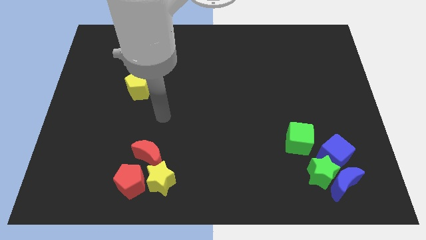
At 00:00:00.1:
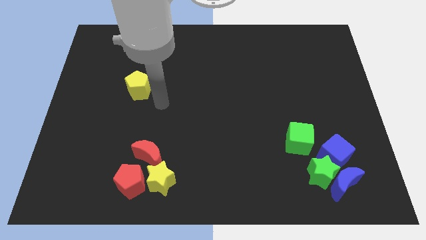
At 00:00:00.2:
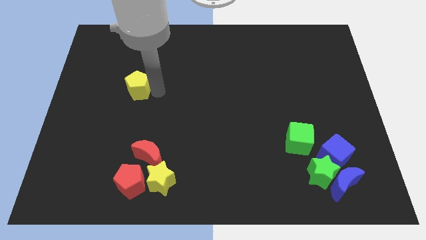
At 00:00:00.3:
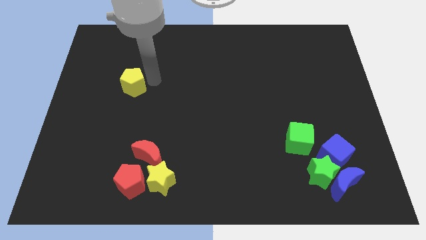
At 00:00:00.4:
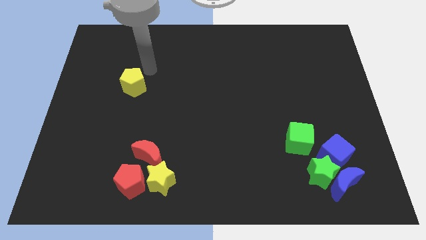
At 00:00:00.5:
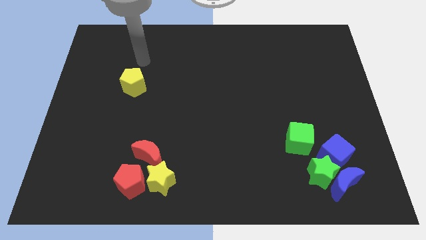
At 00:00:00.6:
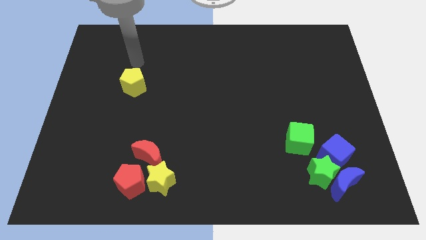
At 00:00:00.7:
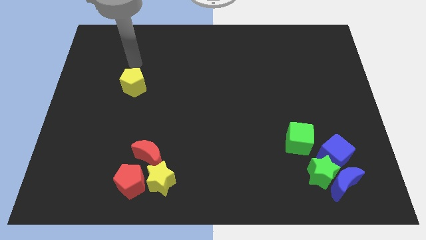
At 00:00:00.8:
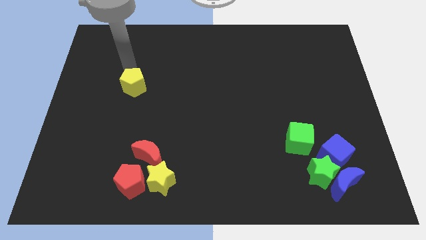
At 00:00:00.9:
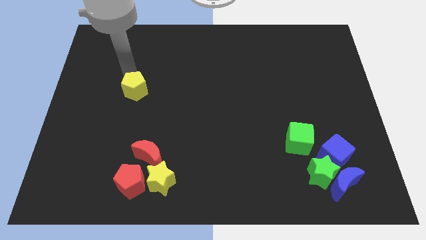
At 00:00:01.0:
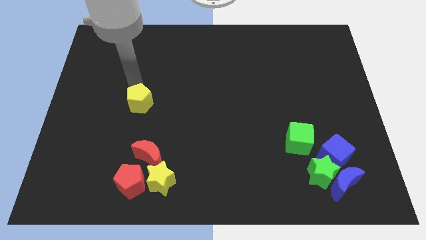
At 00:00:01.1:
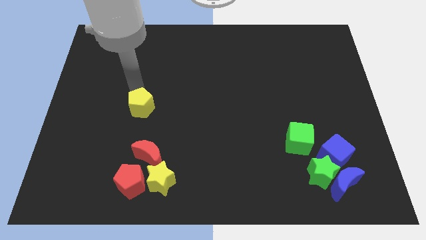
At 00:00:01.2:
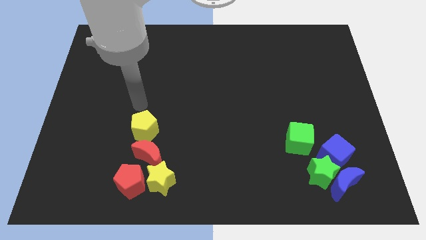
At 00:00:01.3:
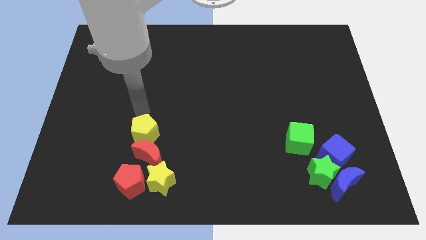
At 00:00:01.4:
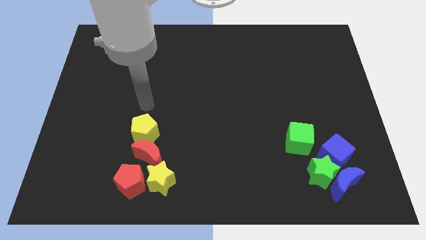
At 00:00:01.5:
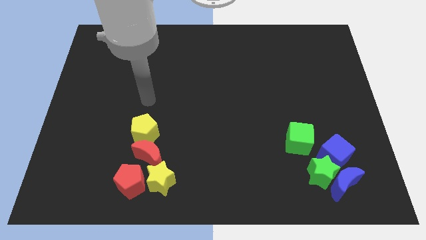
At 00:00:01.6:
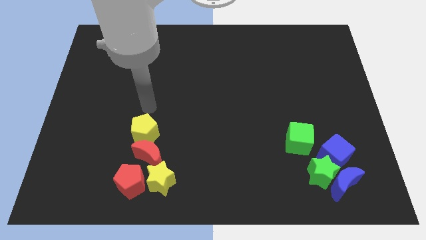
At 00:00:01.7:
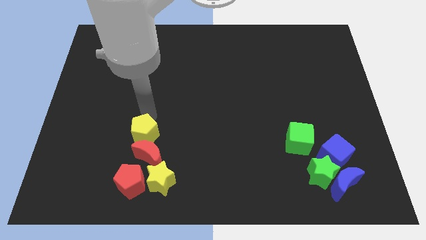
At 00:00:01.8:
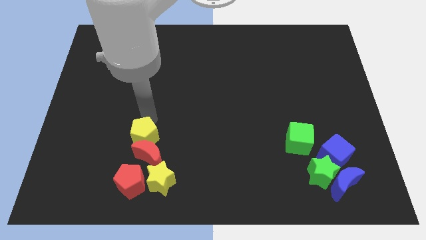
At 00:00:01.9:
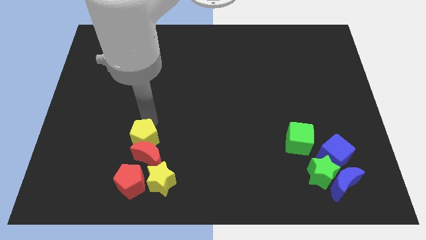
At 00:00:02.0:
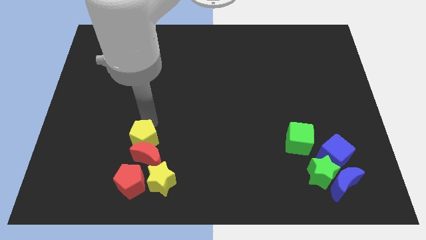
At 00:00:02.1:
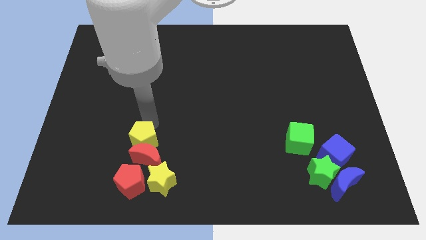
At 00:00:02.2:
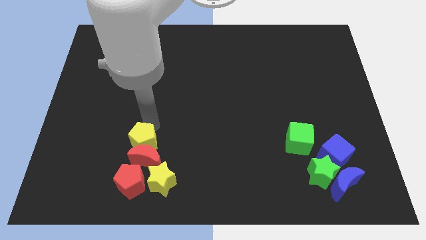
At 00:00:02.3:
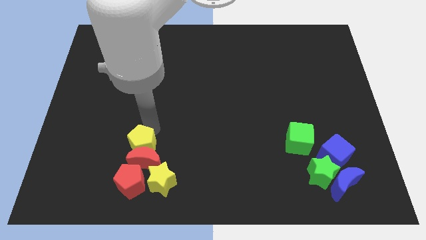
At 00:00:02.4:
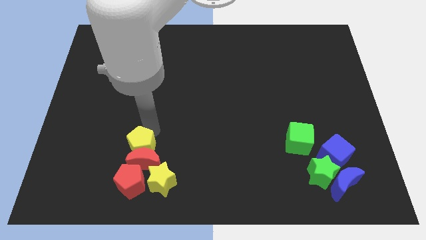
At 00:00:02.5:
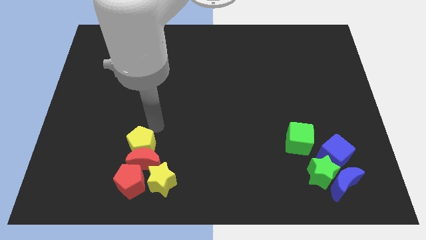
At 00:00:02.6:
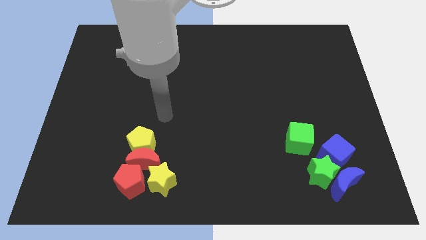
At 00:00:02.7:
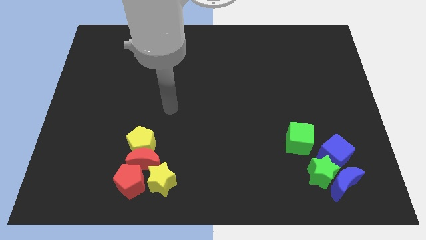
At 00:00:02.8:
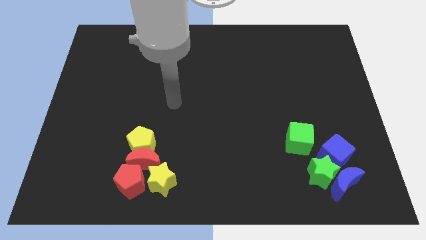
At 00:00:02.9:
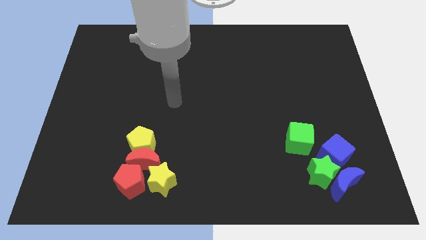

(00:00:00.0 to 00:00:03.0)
place the yellow pentagon above the red crescent

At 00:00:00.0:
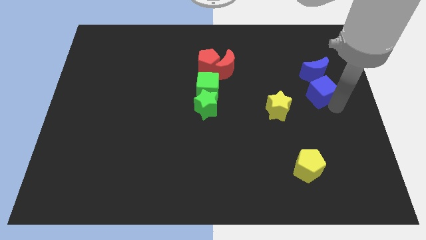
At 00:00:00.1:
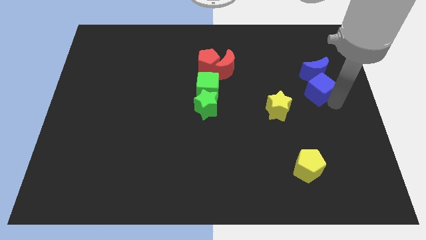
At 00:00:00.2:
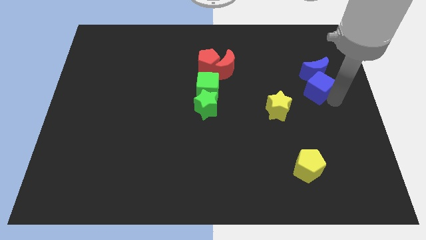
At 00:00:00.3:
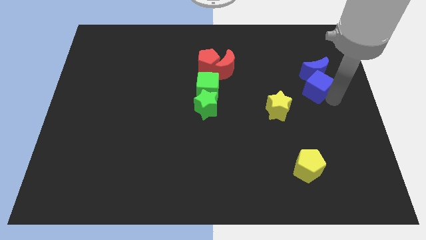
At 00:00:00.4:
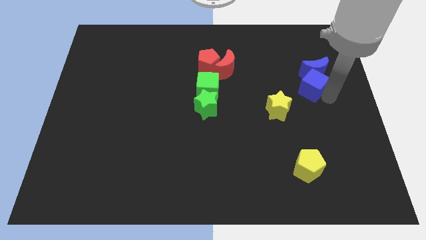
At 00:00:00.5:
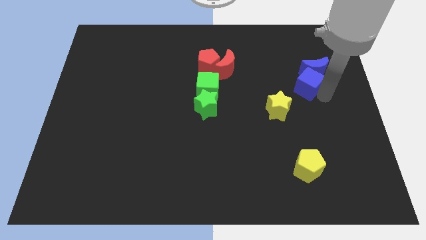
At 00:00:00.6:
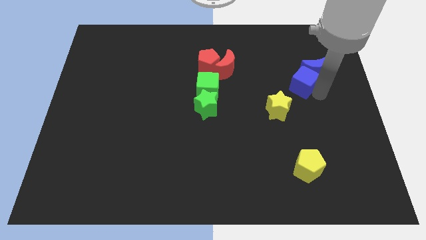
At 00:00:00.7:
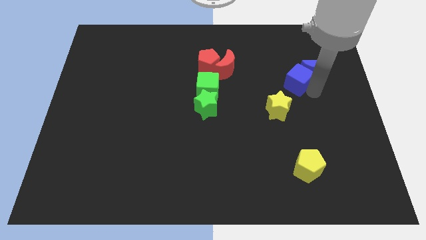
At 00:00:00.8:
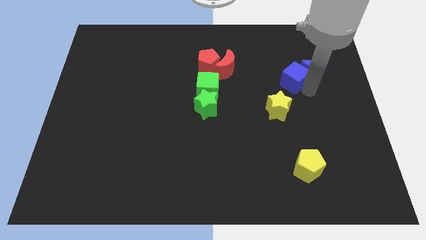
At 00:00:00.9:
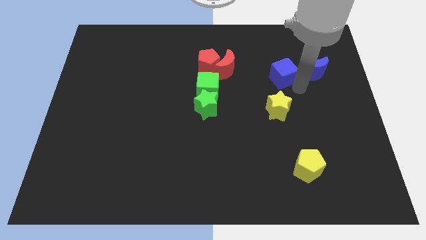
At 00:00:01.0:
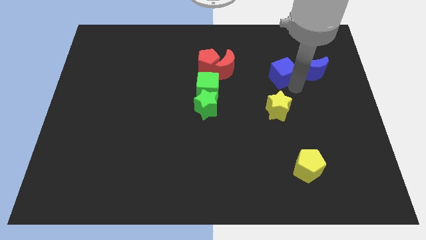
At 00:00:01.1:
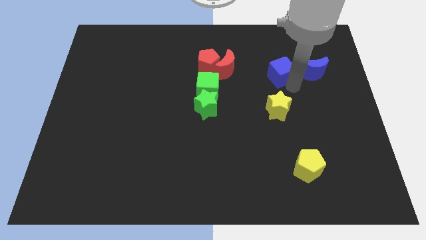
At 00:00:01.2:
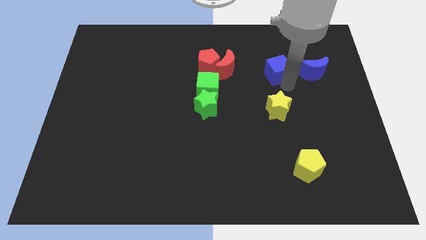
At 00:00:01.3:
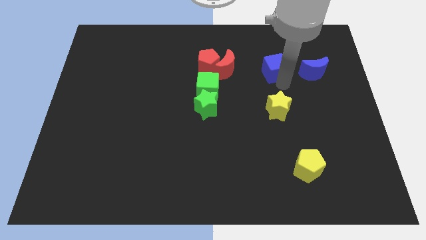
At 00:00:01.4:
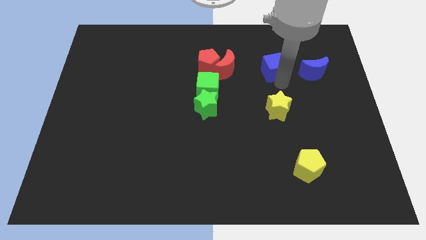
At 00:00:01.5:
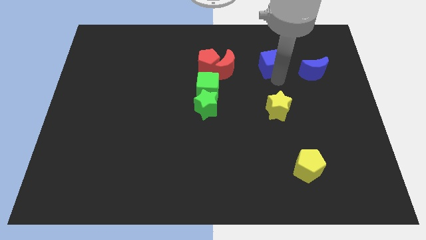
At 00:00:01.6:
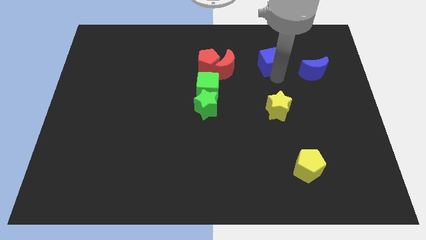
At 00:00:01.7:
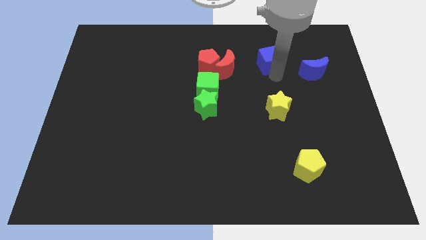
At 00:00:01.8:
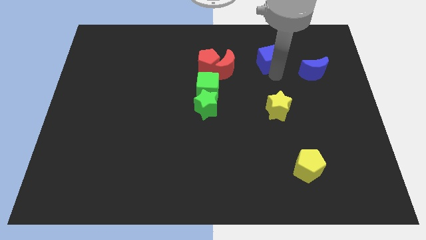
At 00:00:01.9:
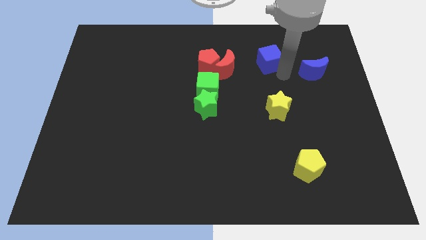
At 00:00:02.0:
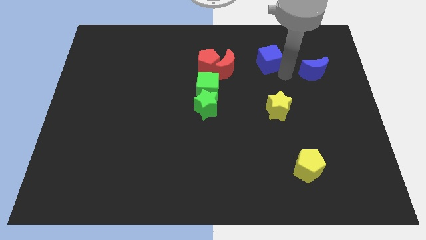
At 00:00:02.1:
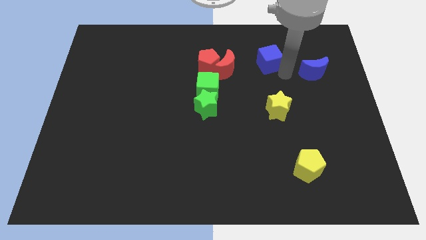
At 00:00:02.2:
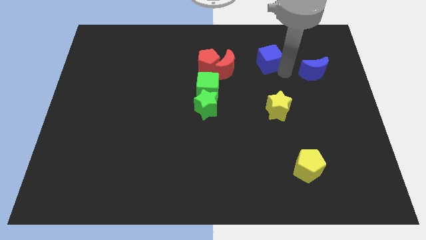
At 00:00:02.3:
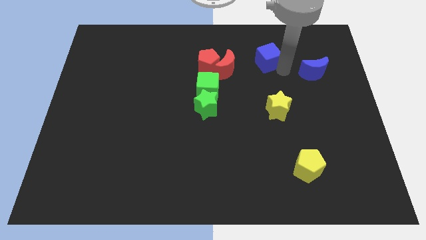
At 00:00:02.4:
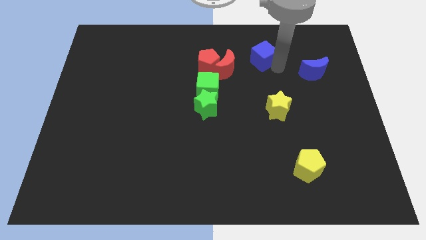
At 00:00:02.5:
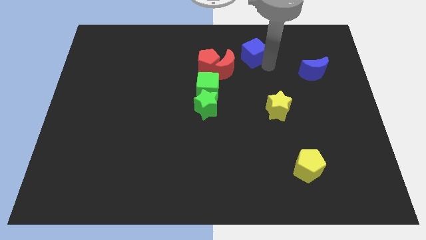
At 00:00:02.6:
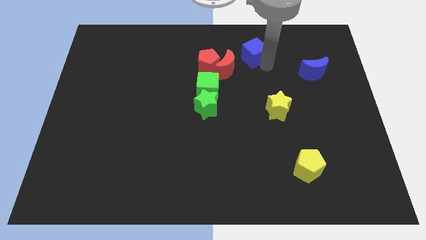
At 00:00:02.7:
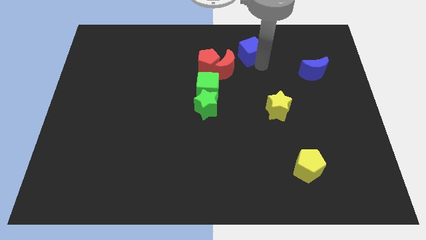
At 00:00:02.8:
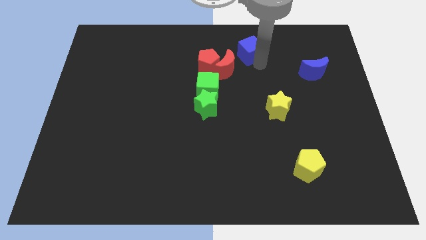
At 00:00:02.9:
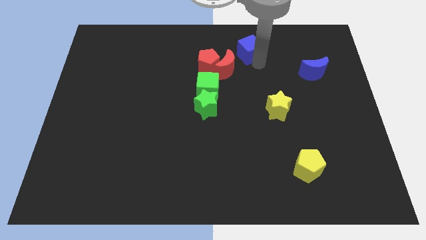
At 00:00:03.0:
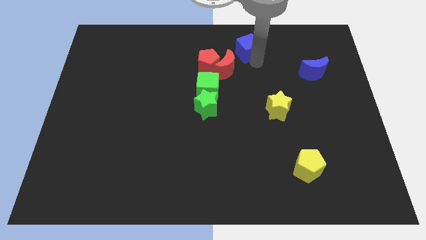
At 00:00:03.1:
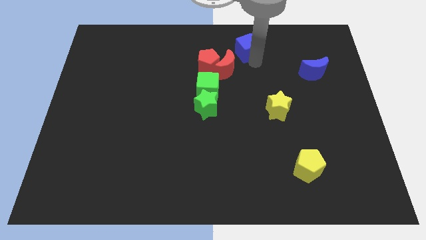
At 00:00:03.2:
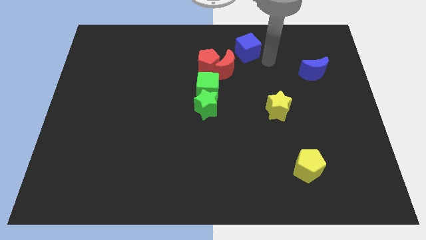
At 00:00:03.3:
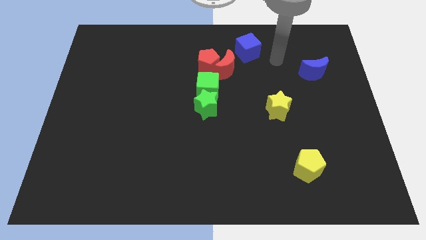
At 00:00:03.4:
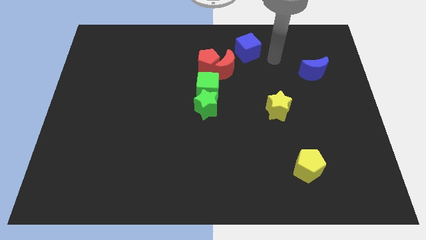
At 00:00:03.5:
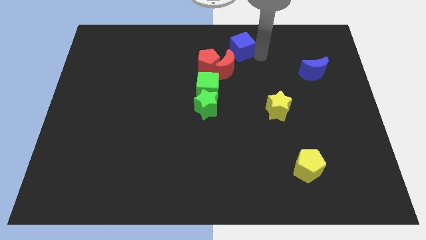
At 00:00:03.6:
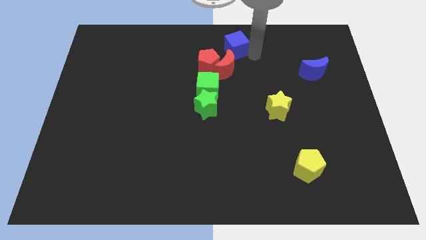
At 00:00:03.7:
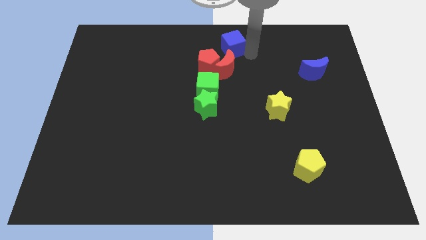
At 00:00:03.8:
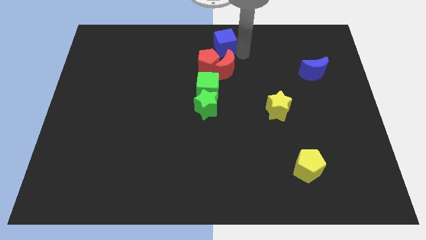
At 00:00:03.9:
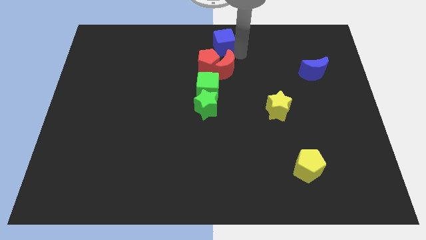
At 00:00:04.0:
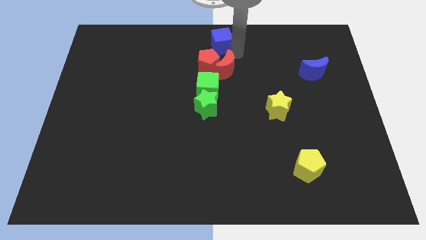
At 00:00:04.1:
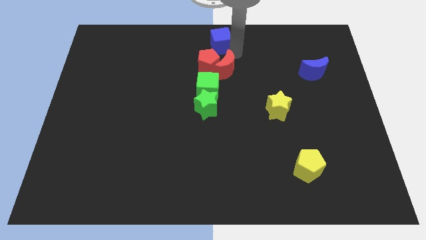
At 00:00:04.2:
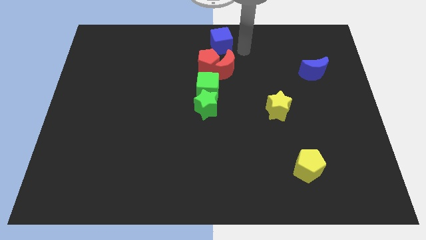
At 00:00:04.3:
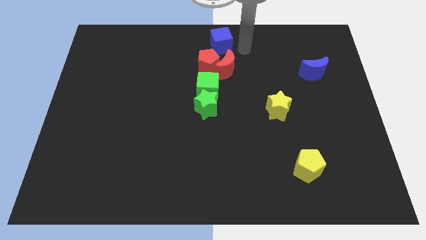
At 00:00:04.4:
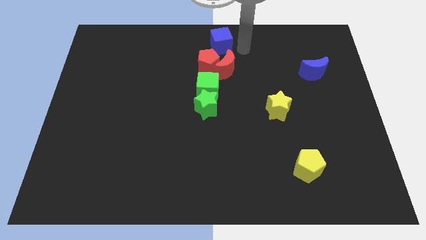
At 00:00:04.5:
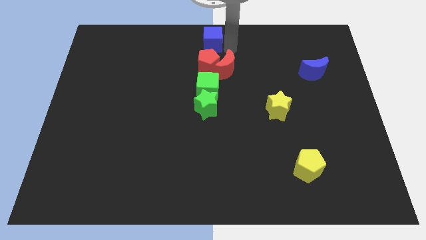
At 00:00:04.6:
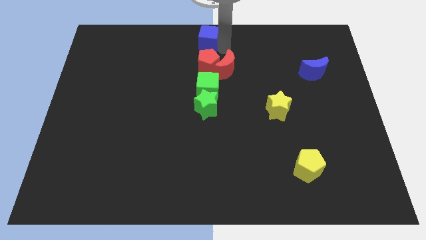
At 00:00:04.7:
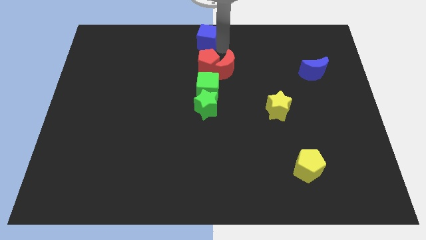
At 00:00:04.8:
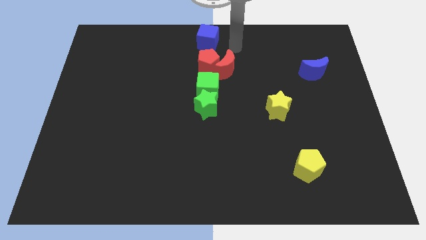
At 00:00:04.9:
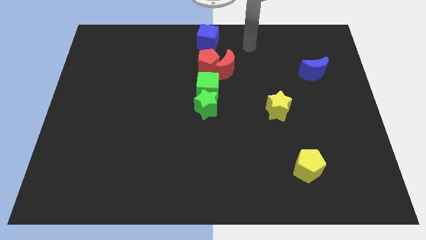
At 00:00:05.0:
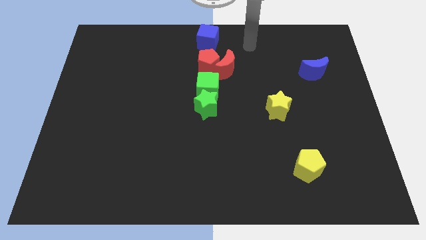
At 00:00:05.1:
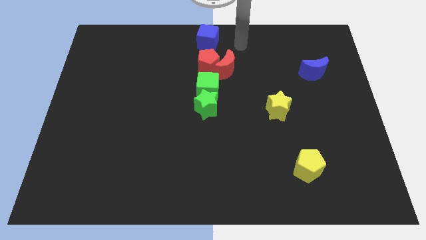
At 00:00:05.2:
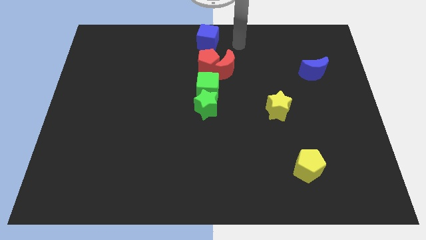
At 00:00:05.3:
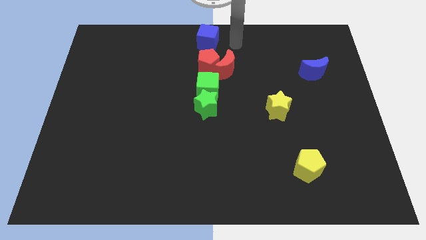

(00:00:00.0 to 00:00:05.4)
place the blue cube above the red pentagon

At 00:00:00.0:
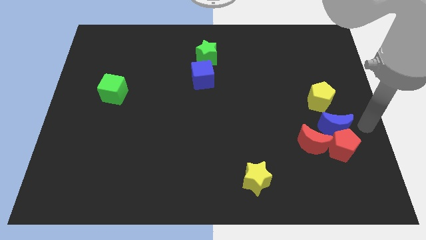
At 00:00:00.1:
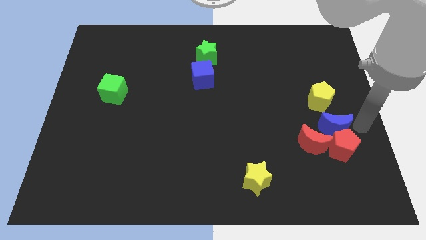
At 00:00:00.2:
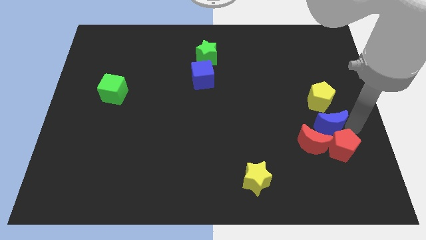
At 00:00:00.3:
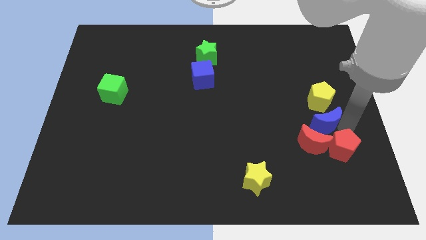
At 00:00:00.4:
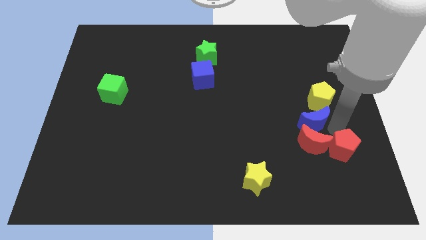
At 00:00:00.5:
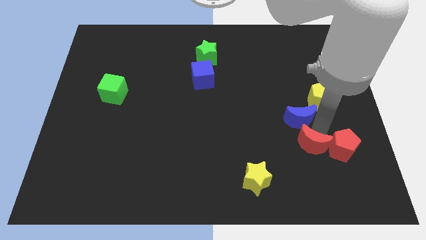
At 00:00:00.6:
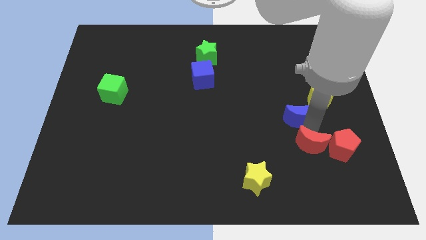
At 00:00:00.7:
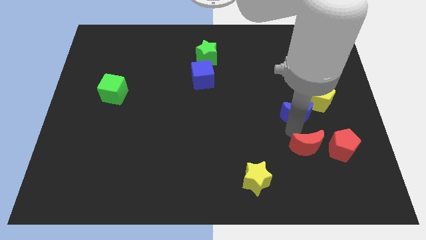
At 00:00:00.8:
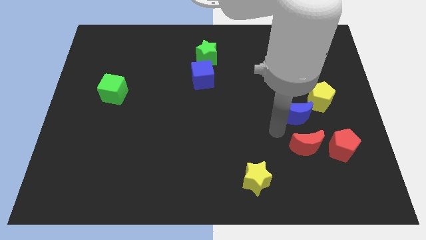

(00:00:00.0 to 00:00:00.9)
move the blue moon away from the red pentagon
